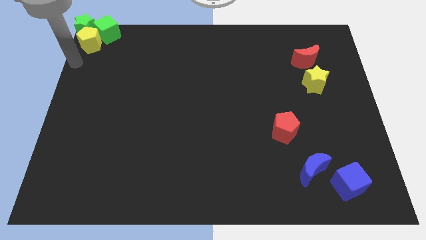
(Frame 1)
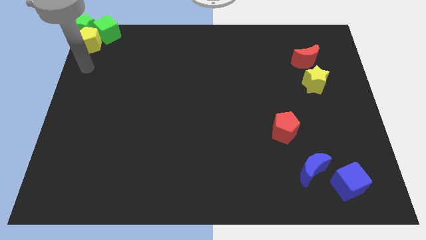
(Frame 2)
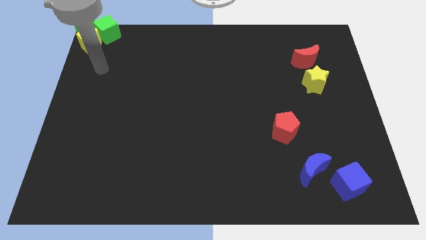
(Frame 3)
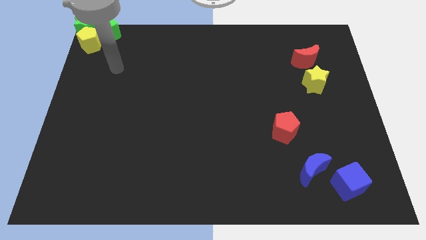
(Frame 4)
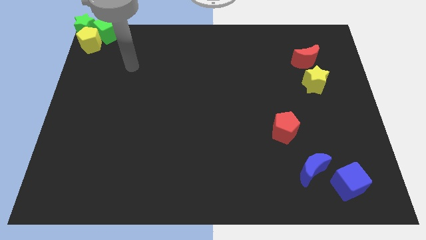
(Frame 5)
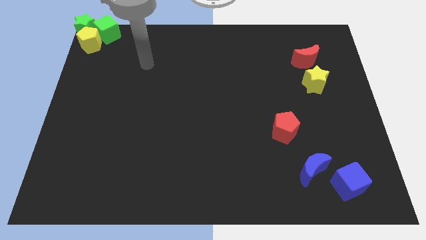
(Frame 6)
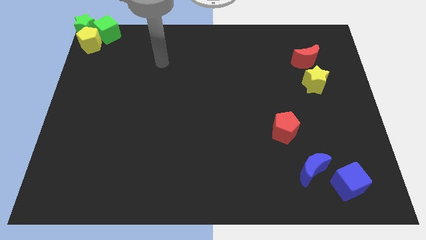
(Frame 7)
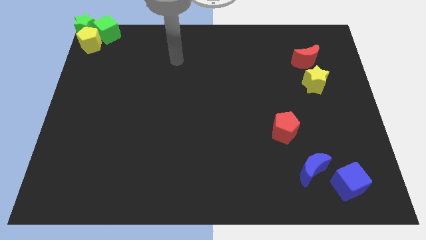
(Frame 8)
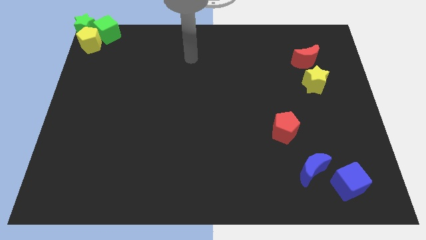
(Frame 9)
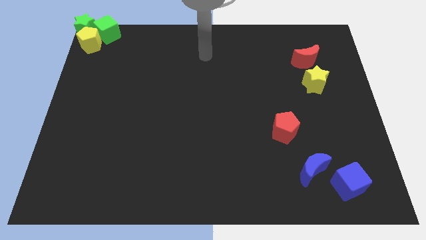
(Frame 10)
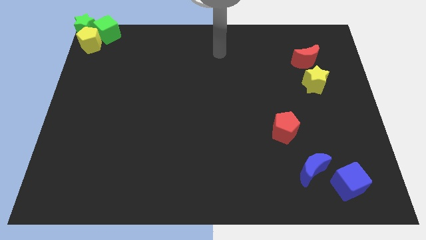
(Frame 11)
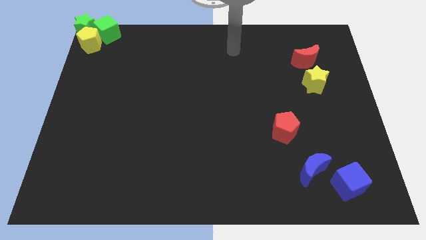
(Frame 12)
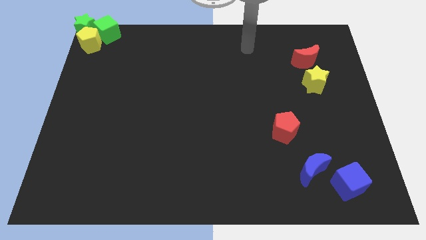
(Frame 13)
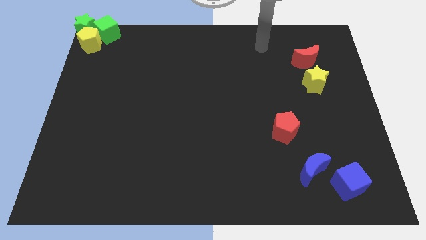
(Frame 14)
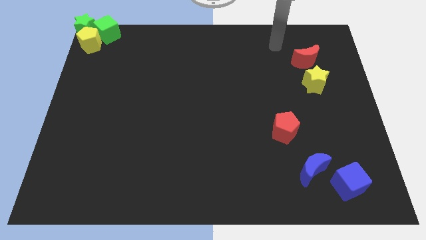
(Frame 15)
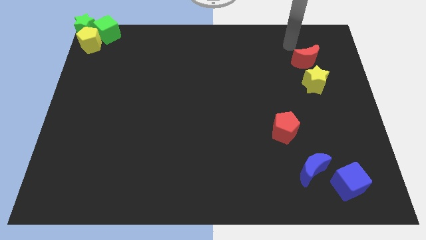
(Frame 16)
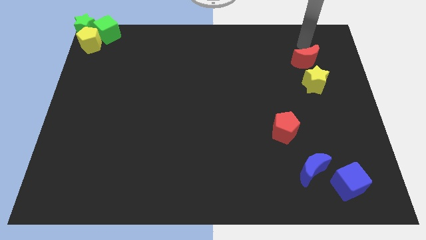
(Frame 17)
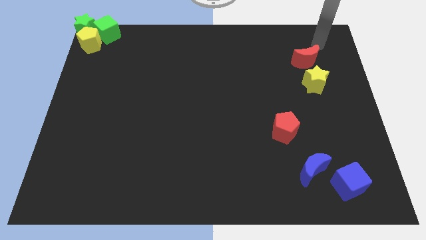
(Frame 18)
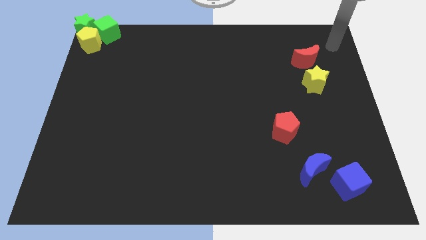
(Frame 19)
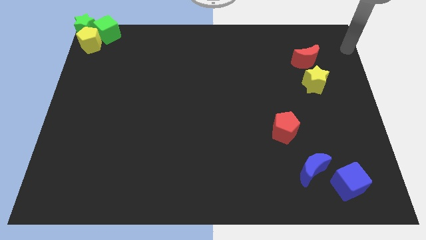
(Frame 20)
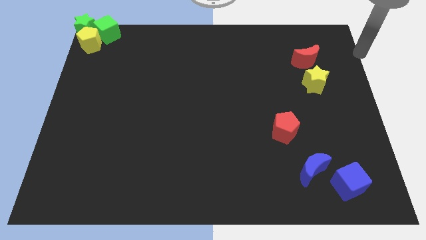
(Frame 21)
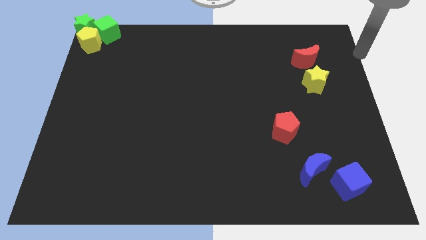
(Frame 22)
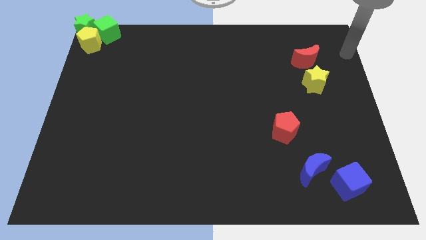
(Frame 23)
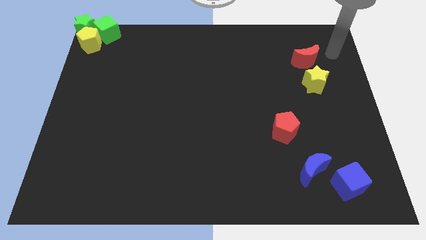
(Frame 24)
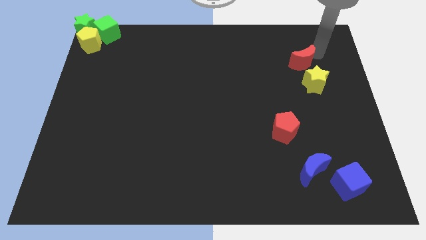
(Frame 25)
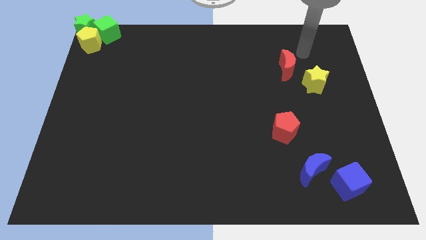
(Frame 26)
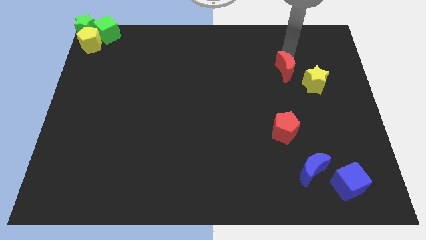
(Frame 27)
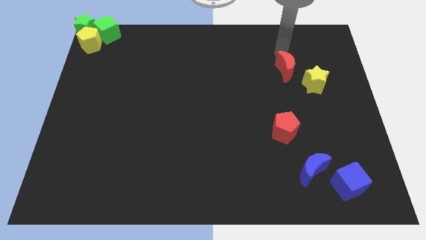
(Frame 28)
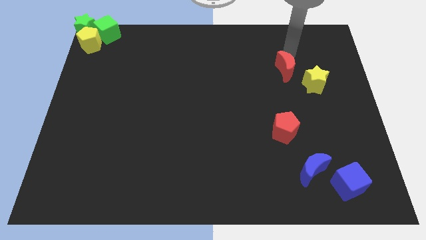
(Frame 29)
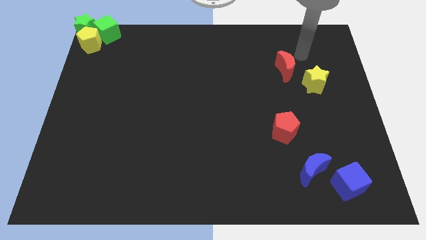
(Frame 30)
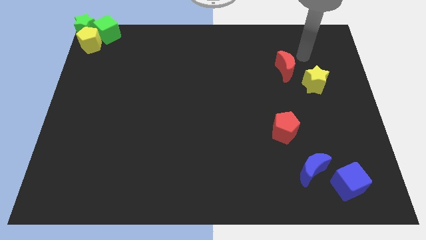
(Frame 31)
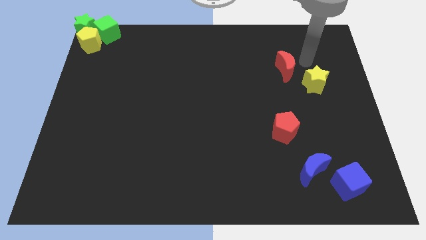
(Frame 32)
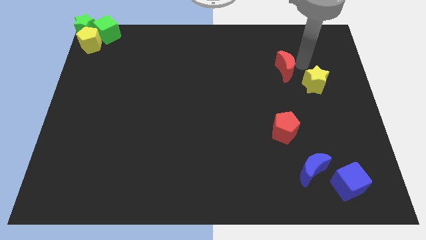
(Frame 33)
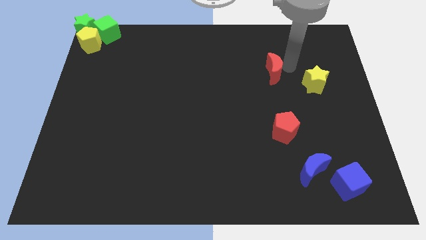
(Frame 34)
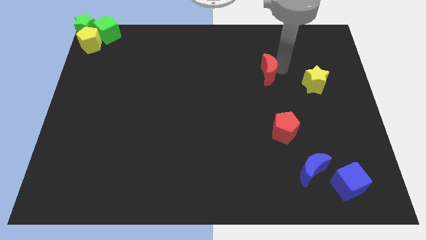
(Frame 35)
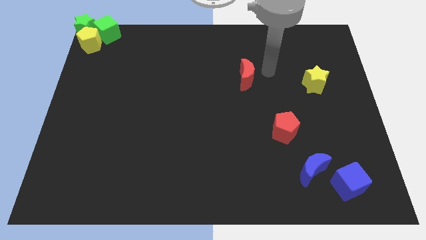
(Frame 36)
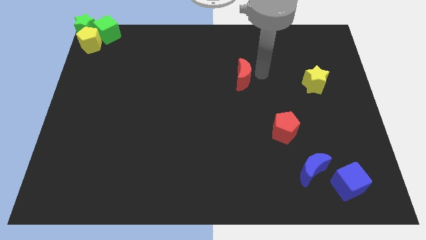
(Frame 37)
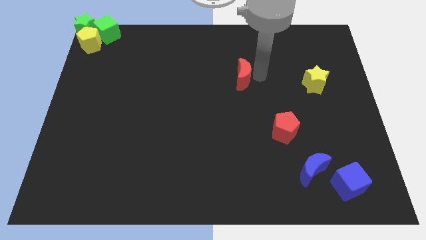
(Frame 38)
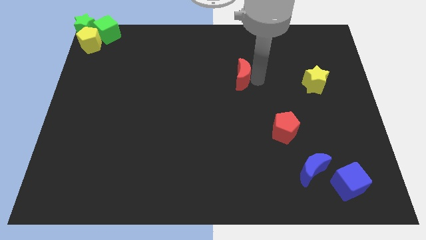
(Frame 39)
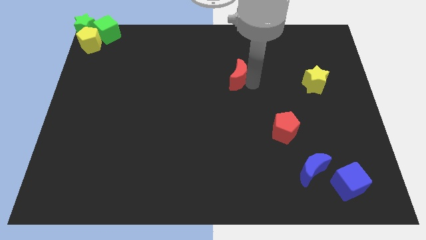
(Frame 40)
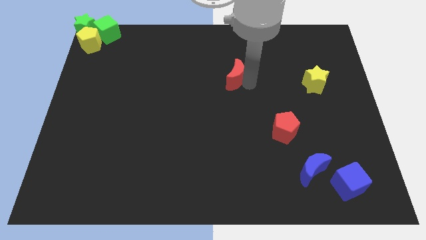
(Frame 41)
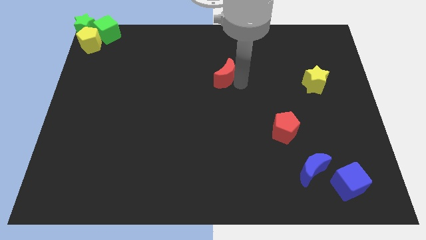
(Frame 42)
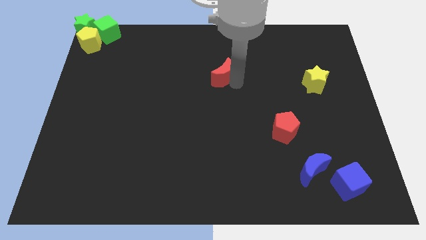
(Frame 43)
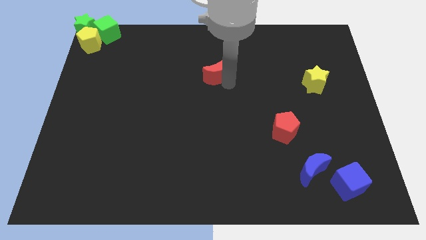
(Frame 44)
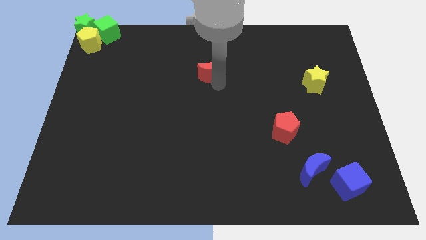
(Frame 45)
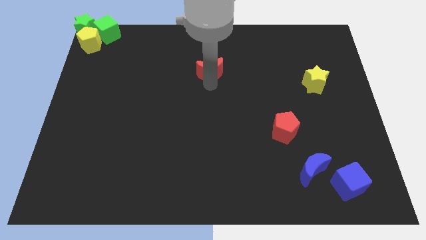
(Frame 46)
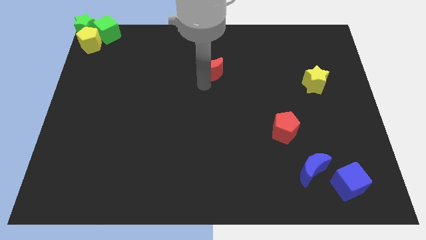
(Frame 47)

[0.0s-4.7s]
slide the red moon parallel left to the yellow star

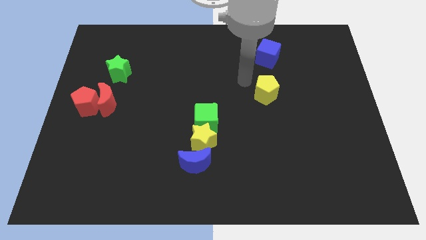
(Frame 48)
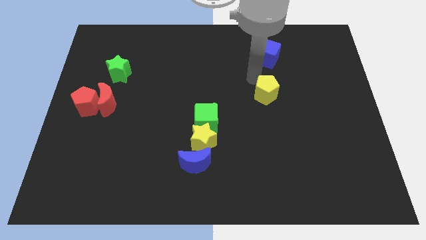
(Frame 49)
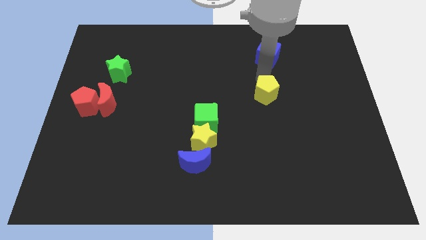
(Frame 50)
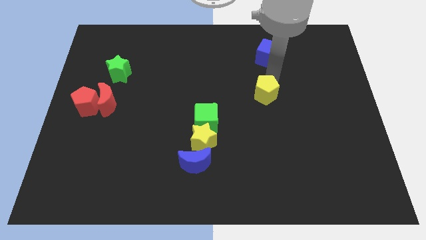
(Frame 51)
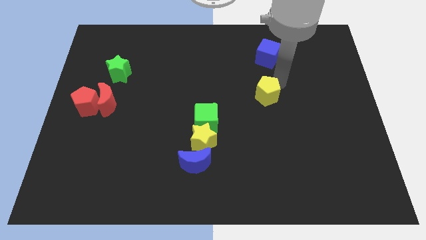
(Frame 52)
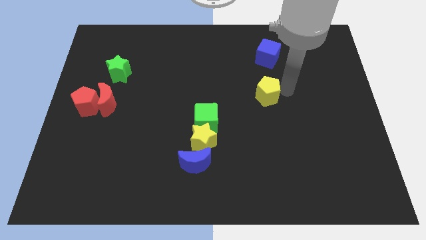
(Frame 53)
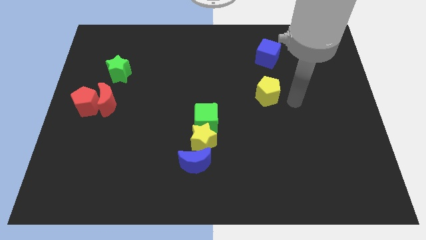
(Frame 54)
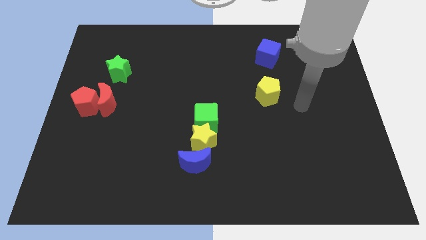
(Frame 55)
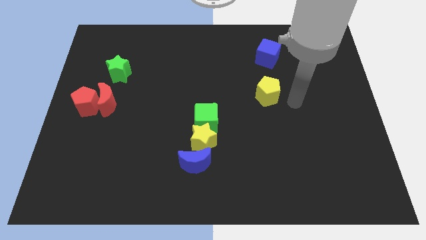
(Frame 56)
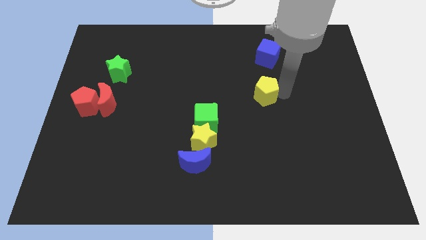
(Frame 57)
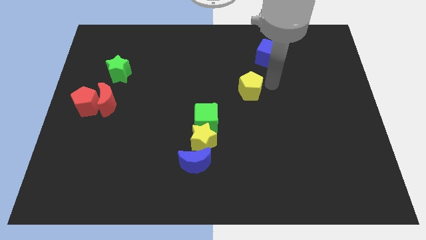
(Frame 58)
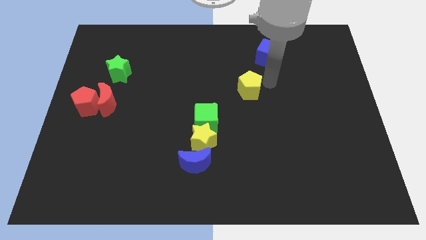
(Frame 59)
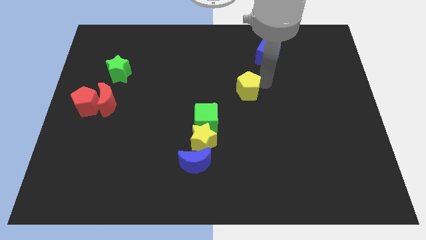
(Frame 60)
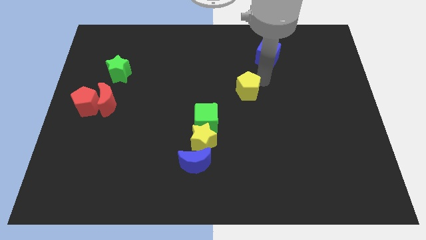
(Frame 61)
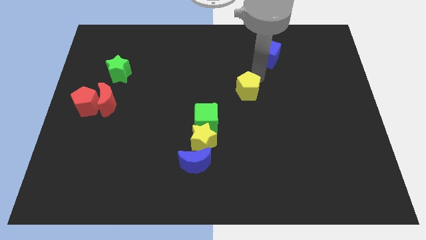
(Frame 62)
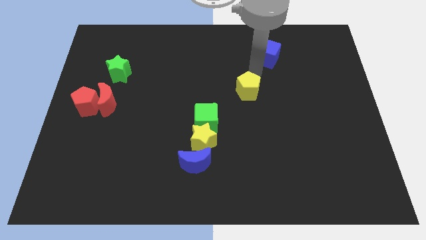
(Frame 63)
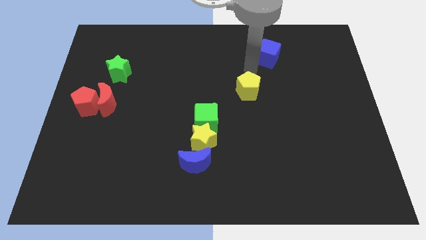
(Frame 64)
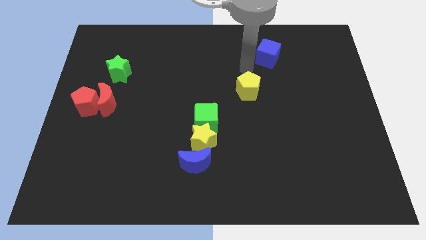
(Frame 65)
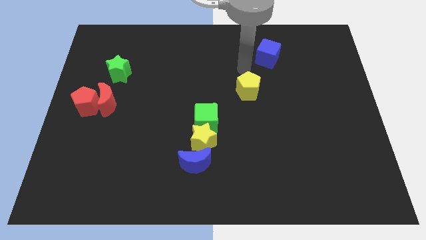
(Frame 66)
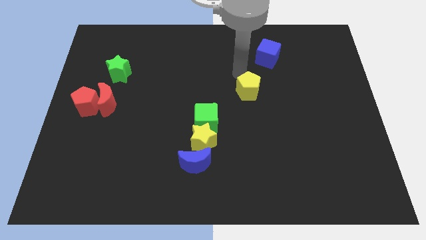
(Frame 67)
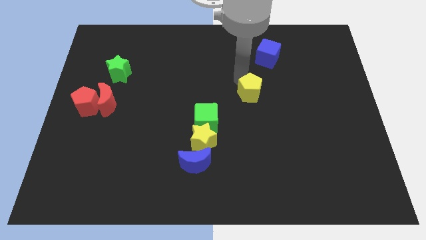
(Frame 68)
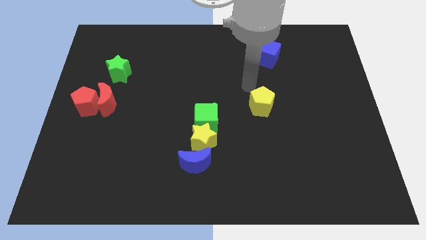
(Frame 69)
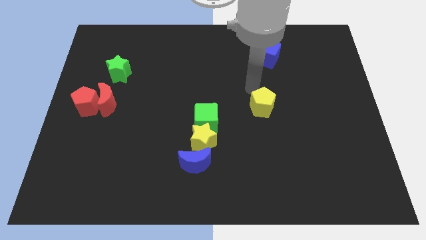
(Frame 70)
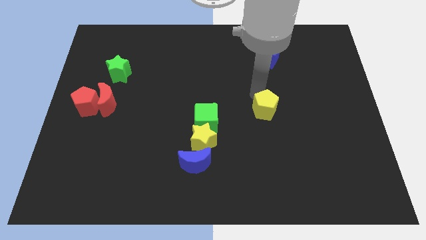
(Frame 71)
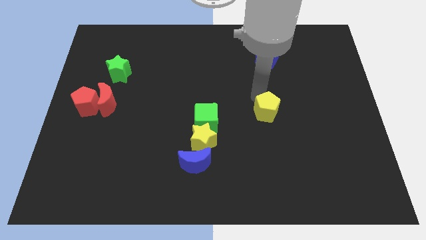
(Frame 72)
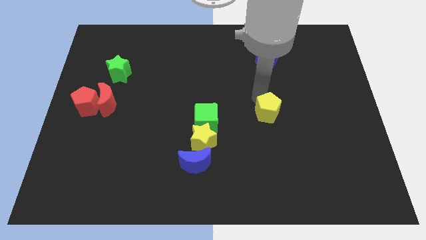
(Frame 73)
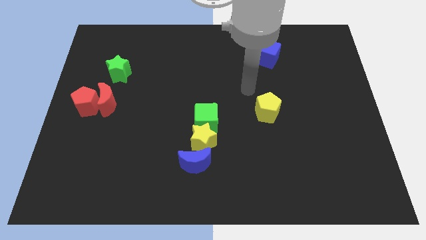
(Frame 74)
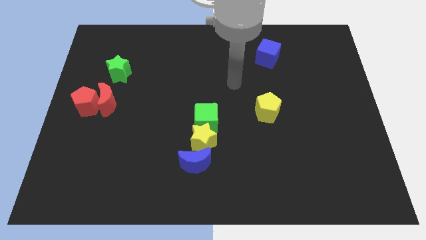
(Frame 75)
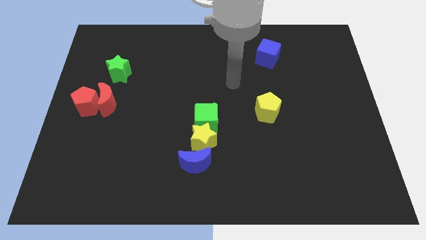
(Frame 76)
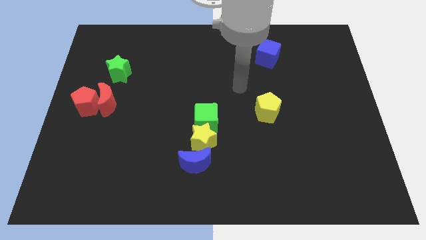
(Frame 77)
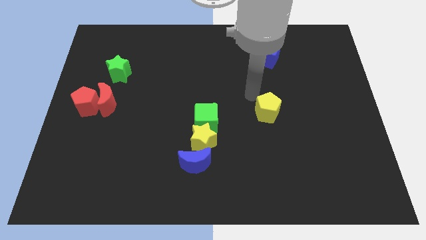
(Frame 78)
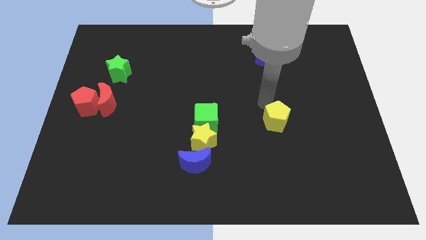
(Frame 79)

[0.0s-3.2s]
place the yellow pentgaon parallel to green cube

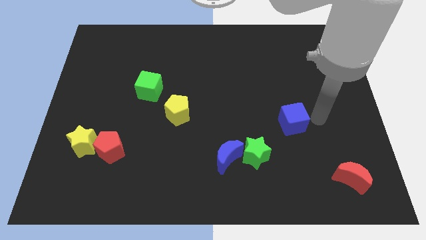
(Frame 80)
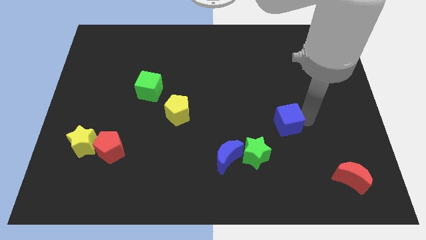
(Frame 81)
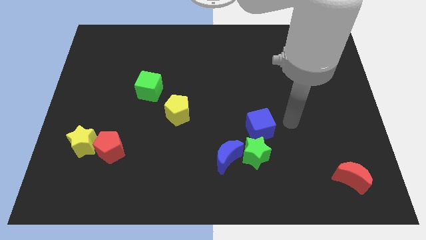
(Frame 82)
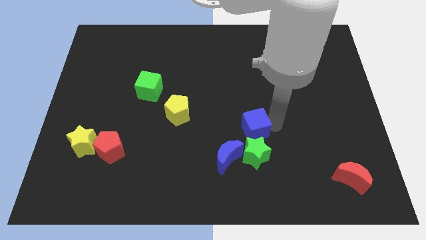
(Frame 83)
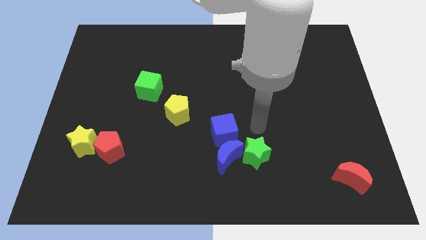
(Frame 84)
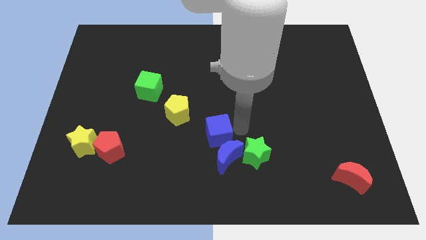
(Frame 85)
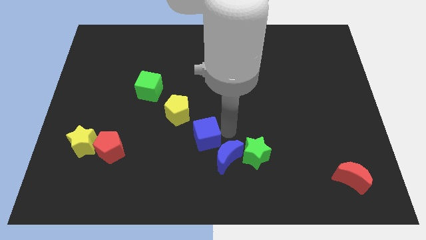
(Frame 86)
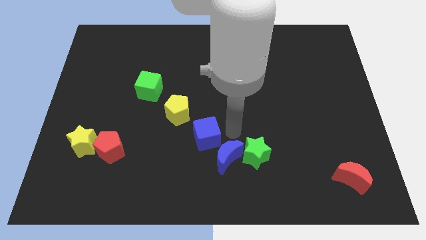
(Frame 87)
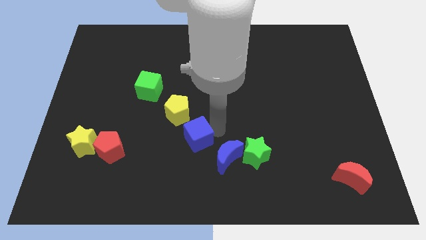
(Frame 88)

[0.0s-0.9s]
place blue cube between yellow pentagon and blue moon

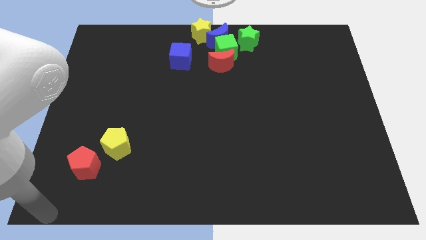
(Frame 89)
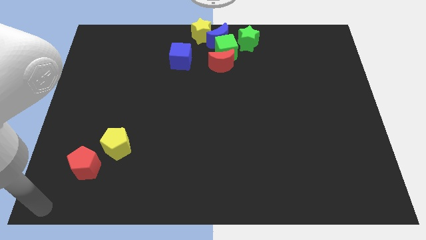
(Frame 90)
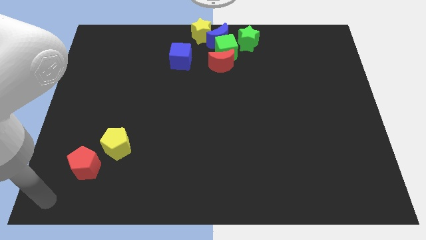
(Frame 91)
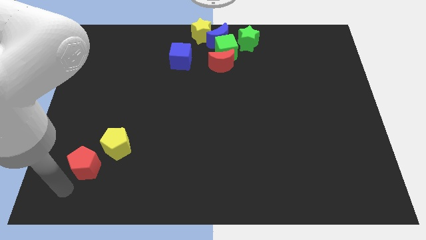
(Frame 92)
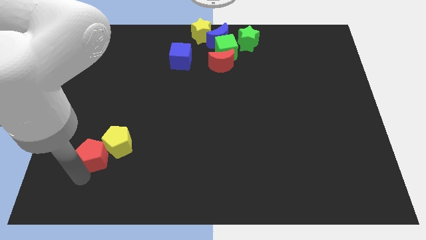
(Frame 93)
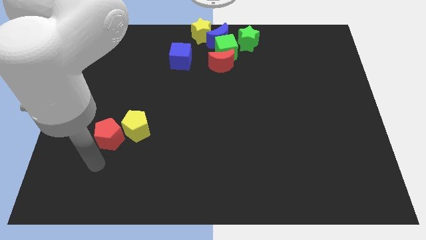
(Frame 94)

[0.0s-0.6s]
push the red pentagon into the yellow pentagon
